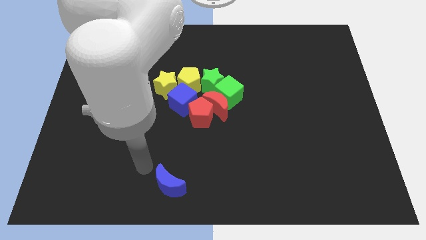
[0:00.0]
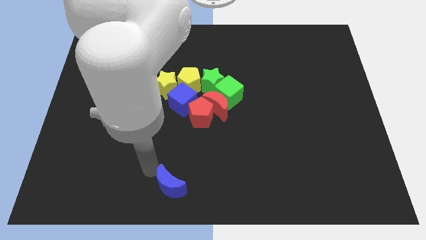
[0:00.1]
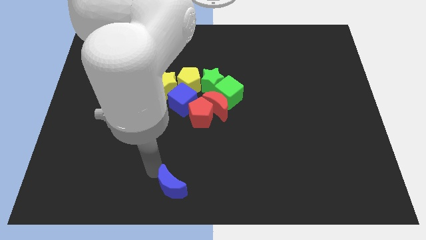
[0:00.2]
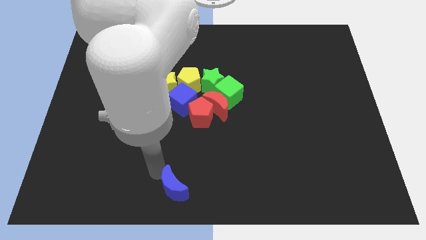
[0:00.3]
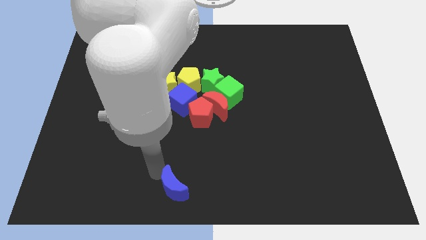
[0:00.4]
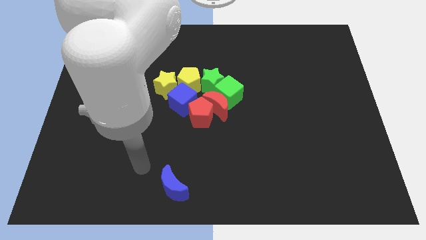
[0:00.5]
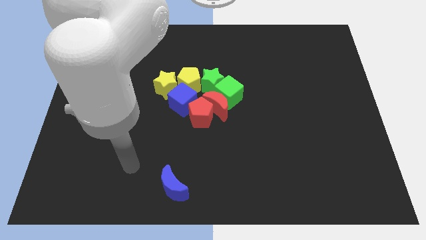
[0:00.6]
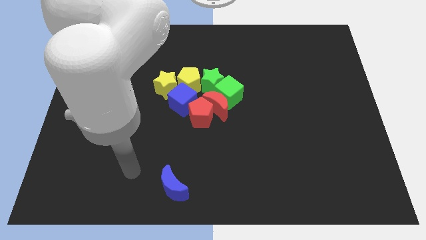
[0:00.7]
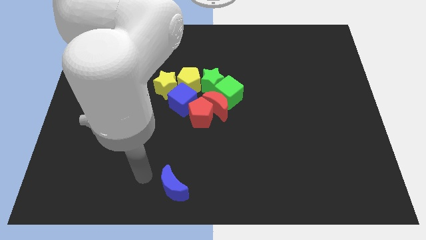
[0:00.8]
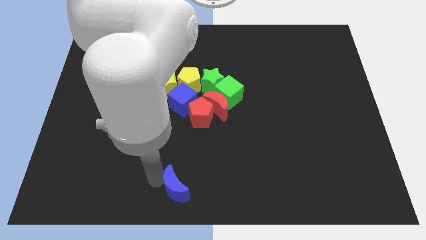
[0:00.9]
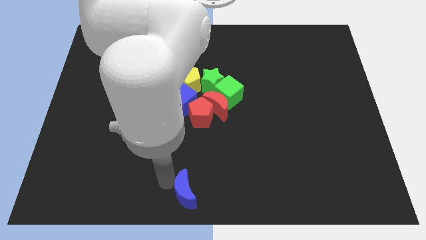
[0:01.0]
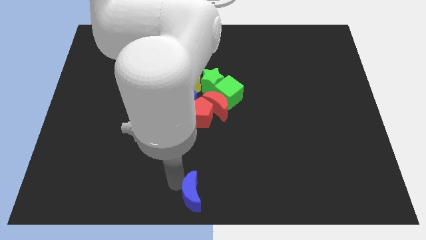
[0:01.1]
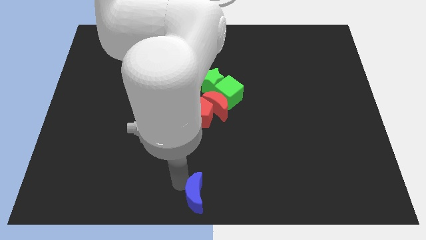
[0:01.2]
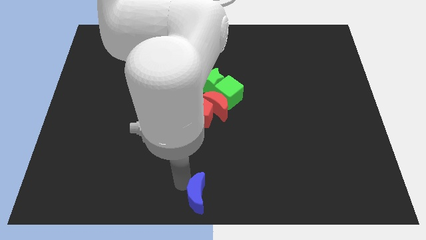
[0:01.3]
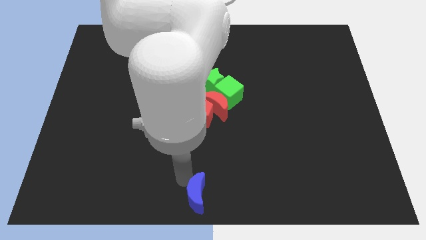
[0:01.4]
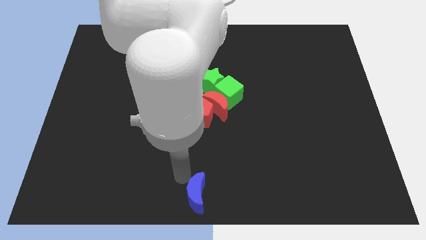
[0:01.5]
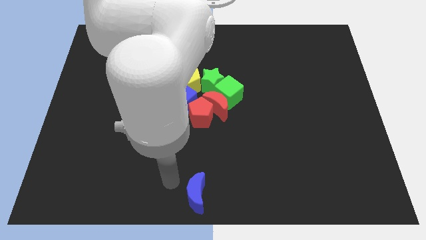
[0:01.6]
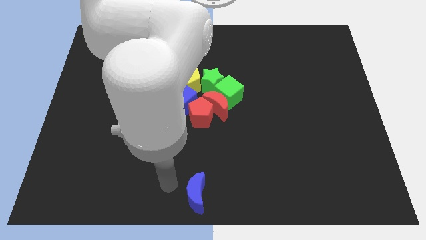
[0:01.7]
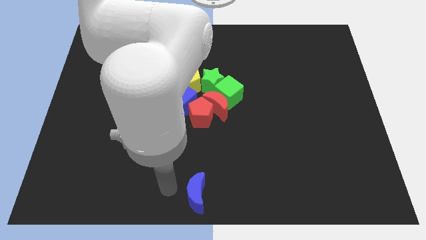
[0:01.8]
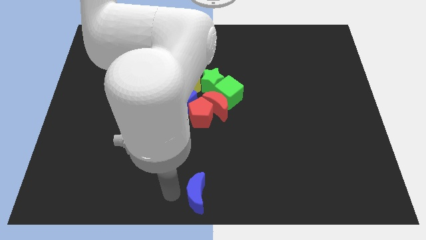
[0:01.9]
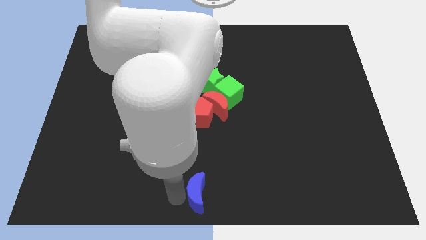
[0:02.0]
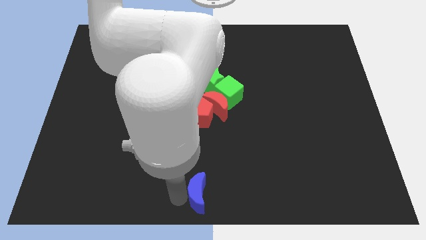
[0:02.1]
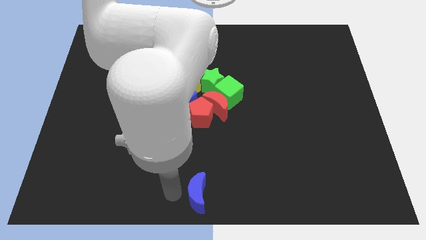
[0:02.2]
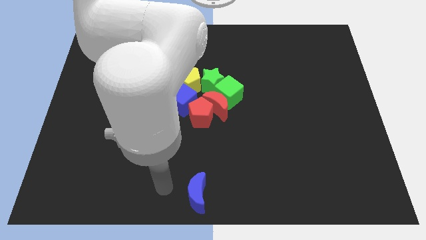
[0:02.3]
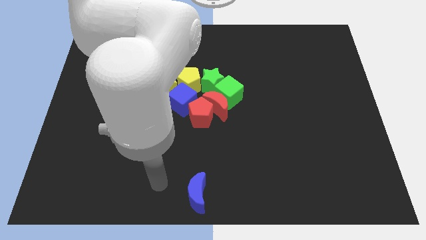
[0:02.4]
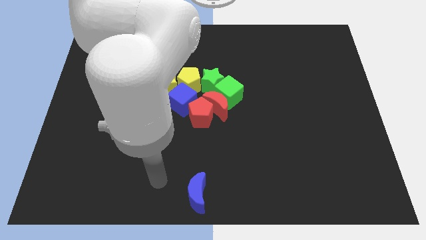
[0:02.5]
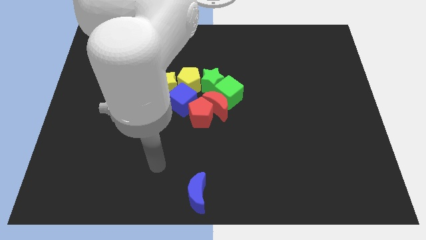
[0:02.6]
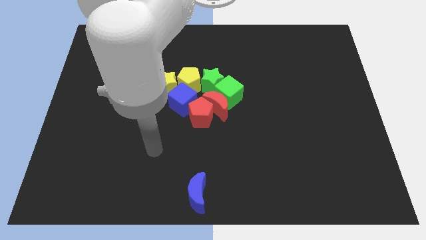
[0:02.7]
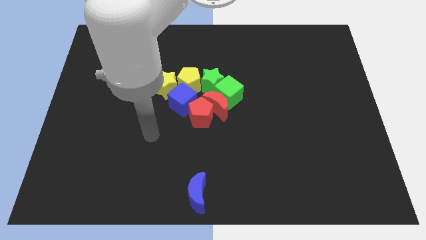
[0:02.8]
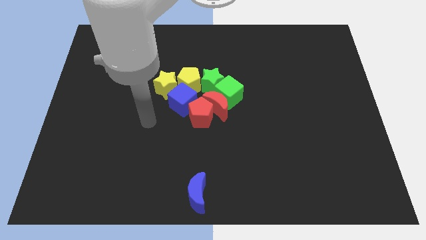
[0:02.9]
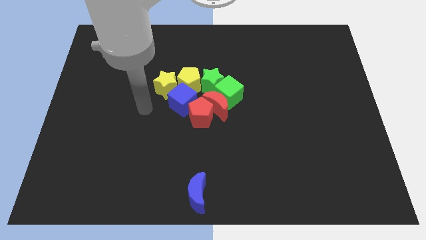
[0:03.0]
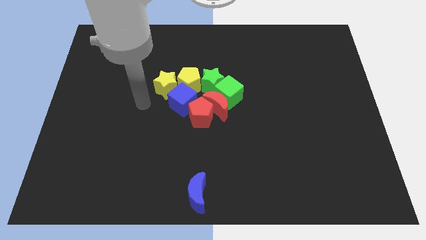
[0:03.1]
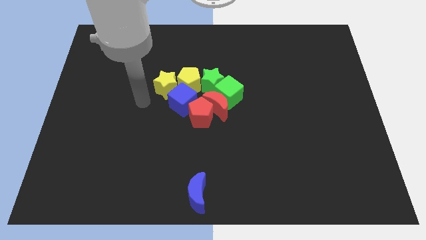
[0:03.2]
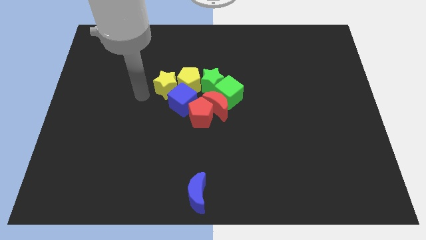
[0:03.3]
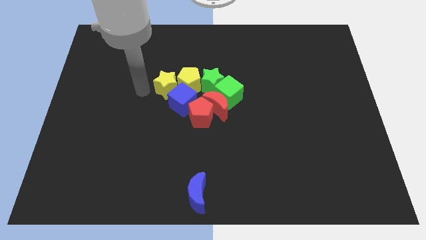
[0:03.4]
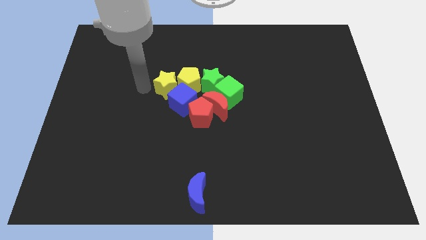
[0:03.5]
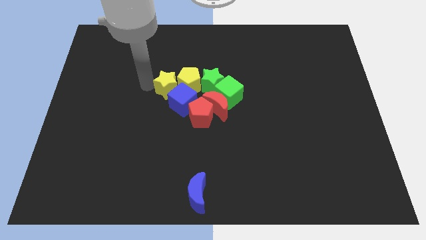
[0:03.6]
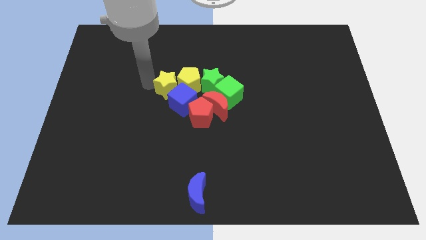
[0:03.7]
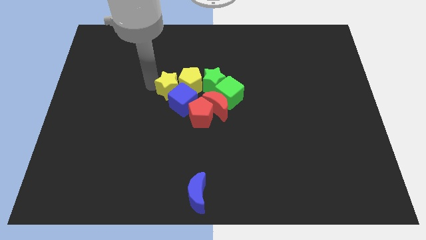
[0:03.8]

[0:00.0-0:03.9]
place the blue moon below the red pentagon

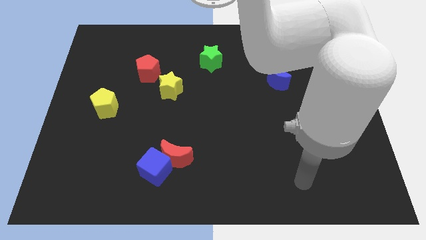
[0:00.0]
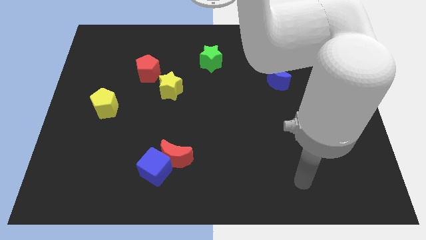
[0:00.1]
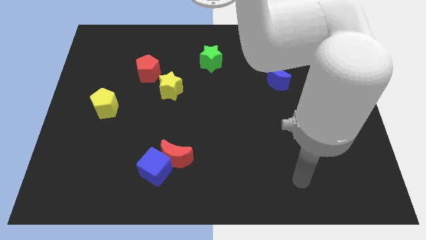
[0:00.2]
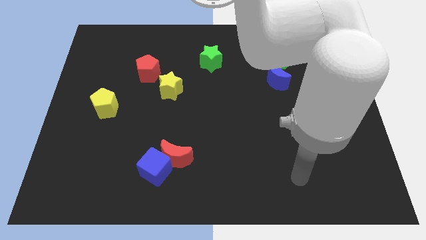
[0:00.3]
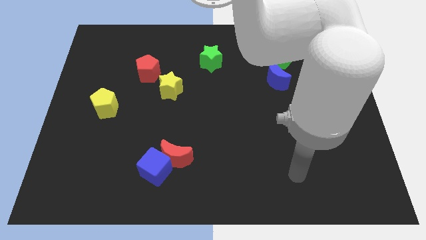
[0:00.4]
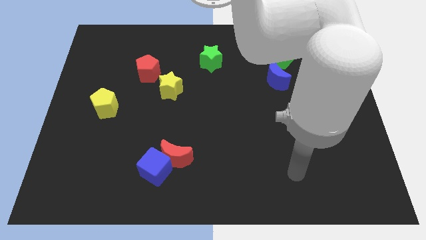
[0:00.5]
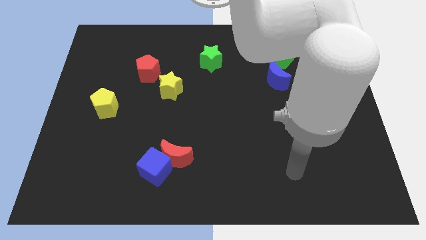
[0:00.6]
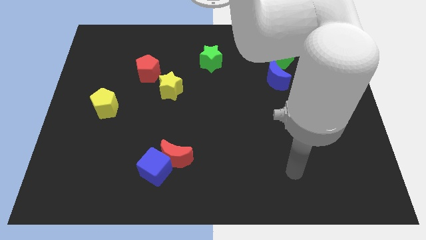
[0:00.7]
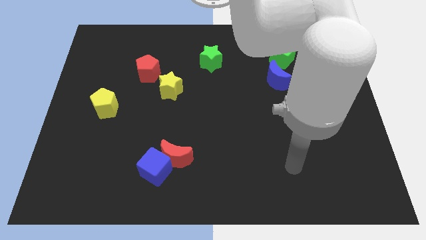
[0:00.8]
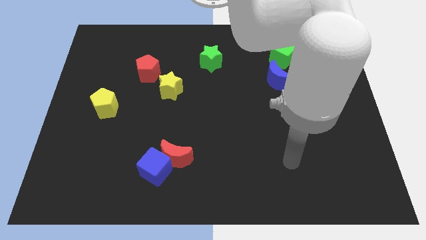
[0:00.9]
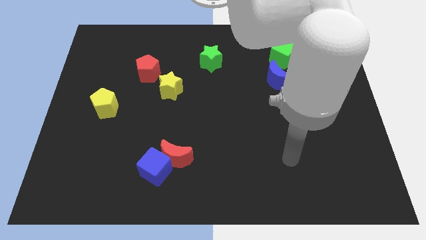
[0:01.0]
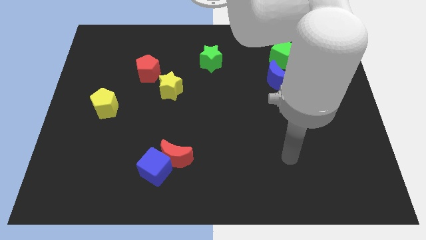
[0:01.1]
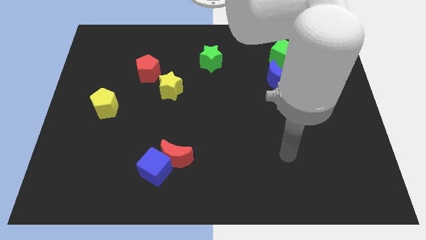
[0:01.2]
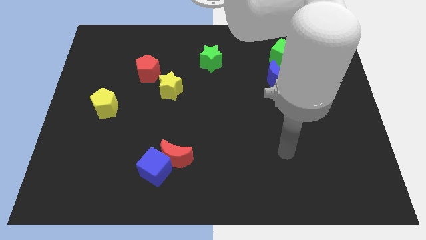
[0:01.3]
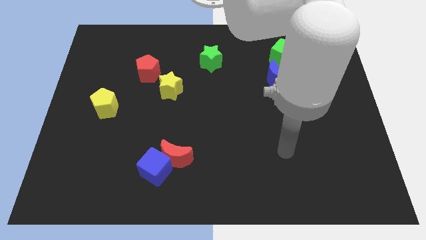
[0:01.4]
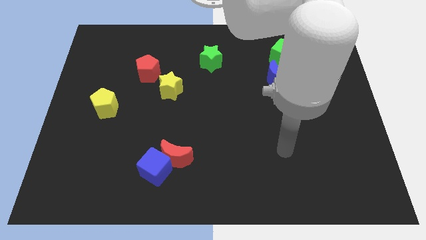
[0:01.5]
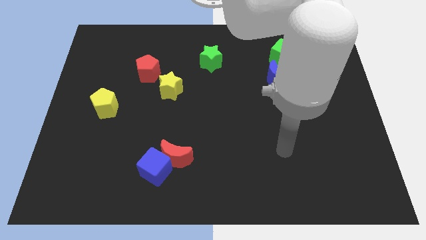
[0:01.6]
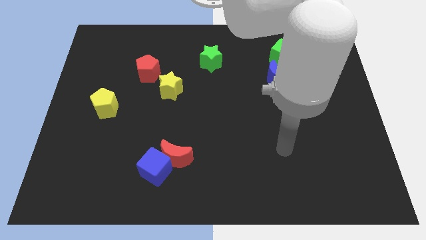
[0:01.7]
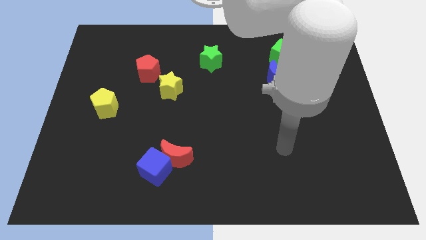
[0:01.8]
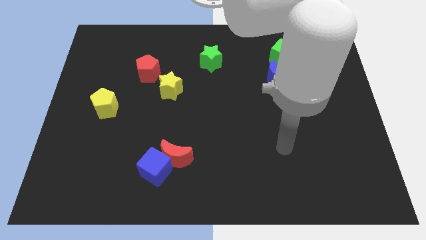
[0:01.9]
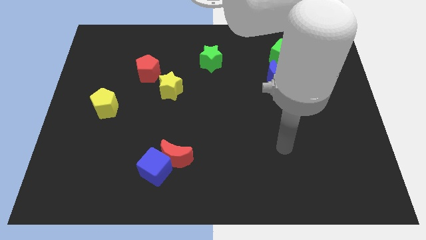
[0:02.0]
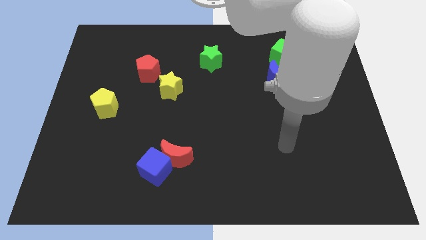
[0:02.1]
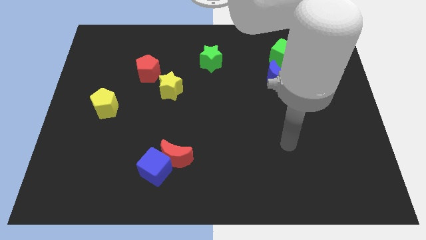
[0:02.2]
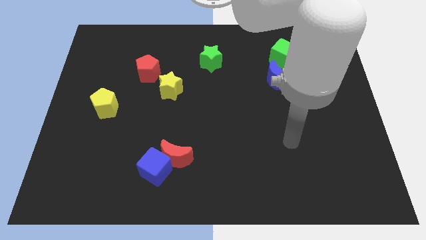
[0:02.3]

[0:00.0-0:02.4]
move the arm towards the blue moon

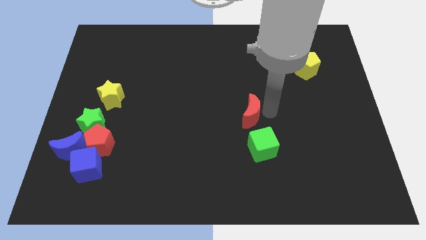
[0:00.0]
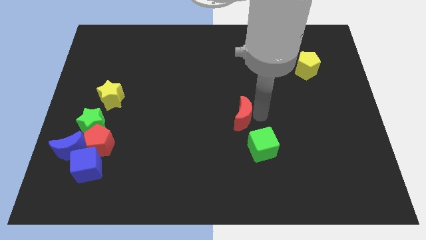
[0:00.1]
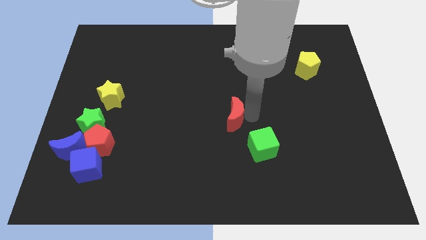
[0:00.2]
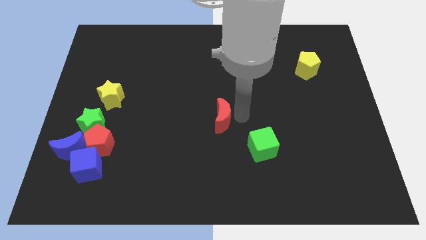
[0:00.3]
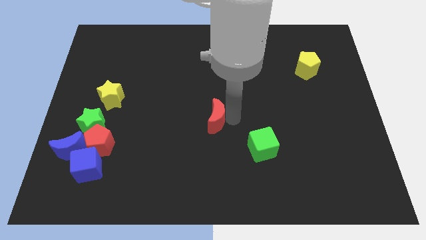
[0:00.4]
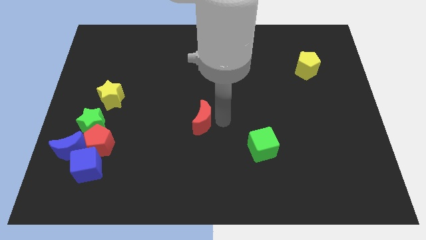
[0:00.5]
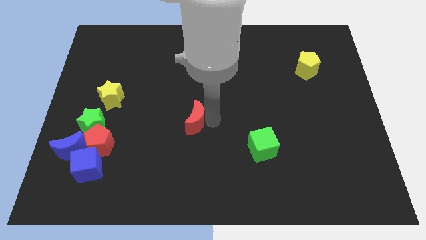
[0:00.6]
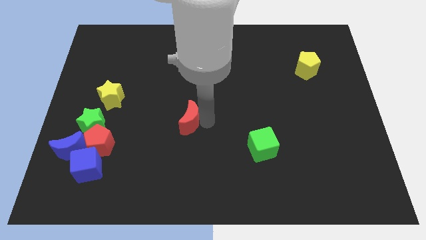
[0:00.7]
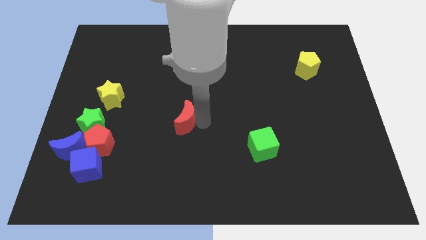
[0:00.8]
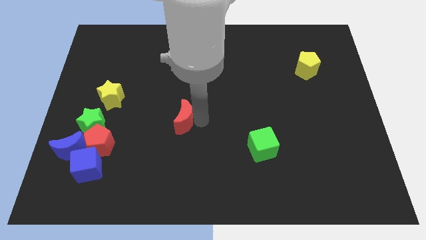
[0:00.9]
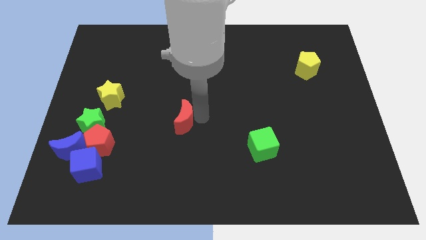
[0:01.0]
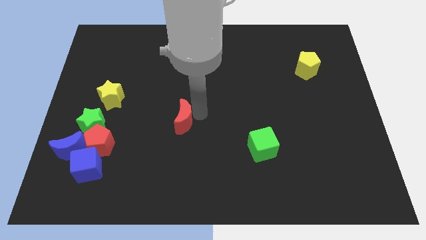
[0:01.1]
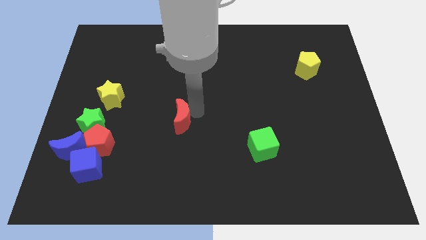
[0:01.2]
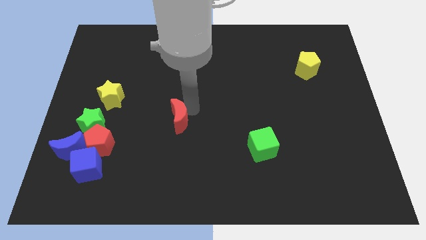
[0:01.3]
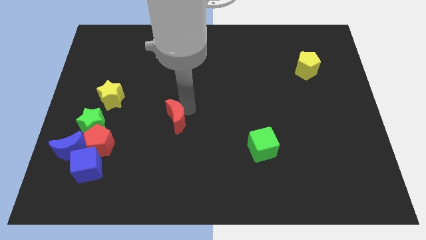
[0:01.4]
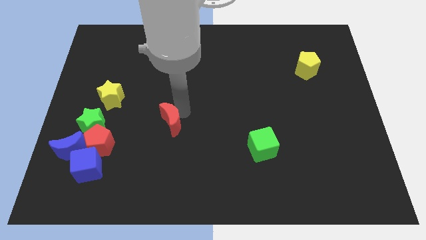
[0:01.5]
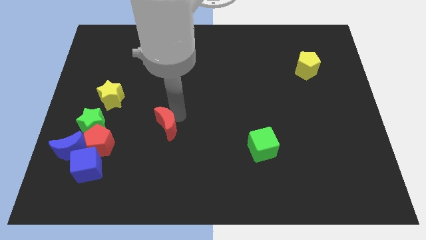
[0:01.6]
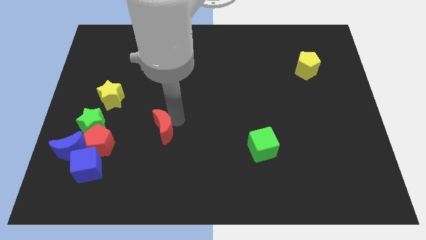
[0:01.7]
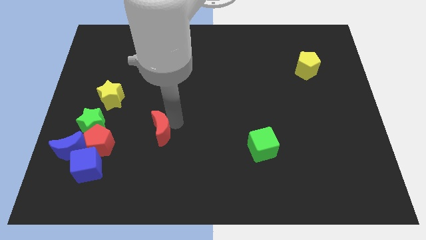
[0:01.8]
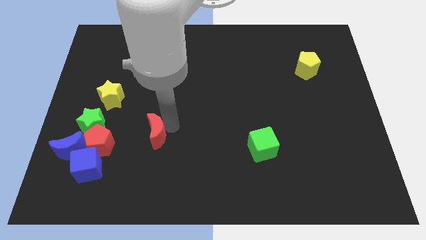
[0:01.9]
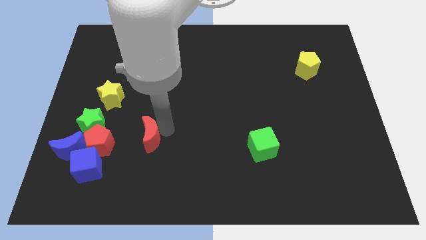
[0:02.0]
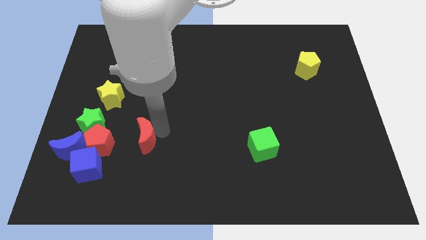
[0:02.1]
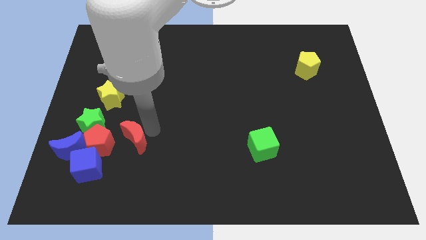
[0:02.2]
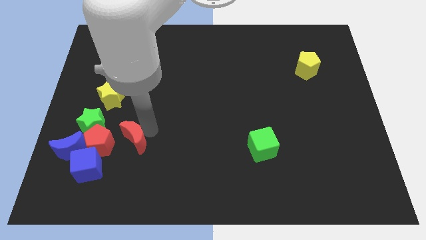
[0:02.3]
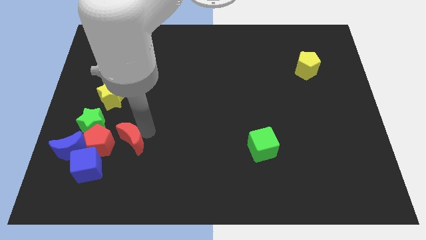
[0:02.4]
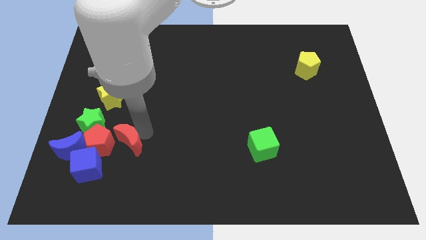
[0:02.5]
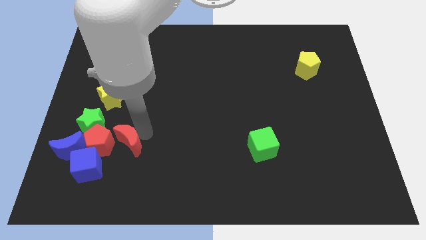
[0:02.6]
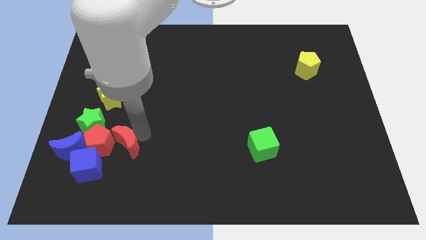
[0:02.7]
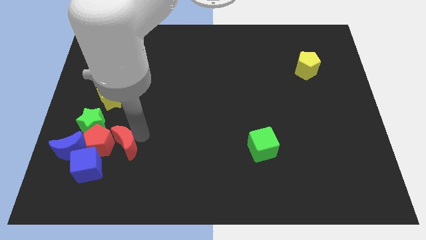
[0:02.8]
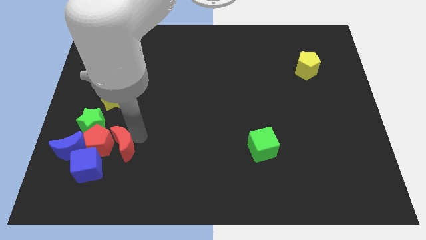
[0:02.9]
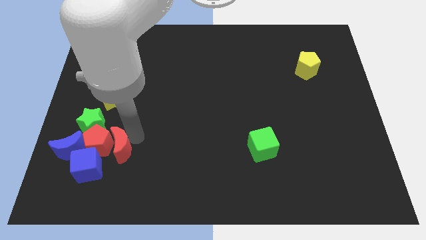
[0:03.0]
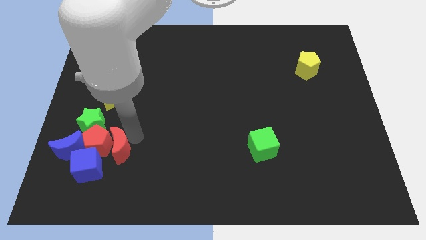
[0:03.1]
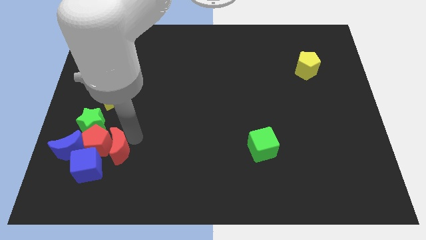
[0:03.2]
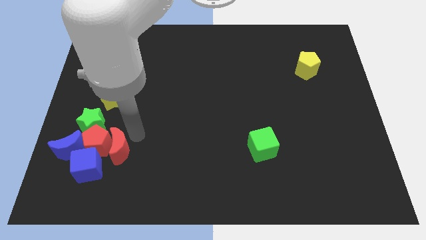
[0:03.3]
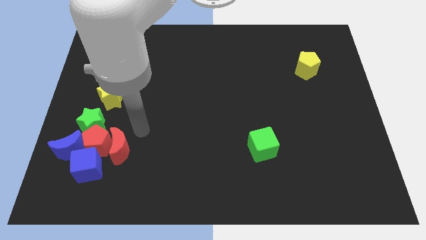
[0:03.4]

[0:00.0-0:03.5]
push the red crescent into the right of the red pentagon
